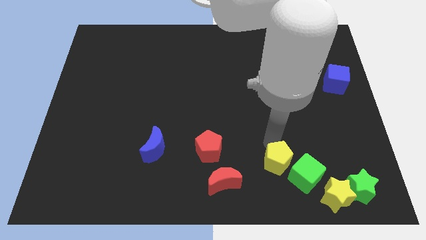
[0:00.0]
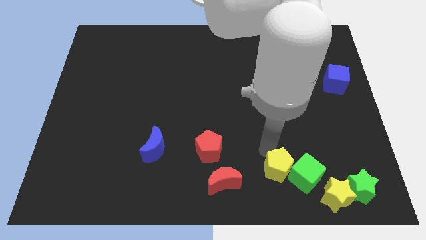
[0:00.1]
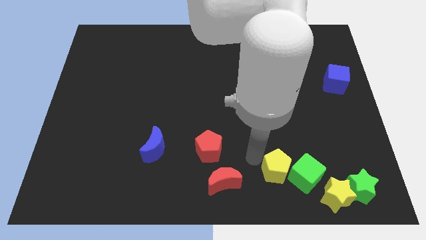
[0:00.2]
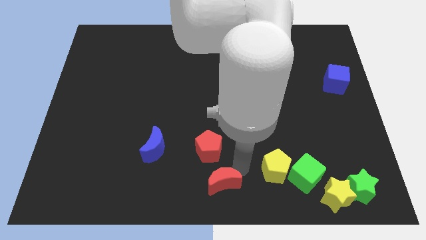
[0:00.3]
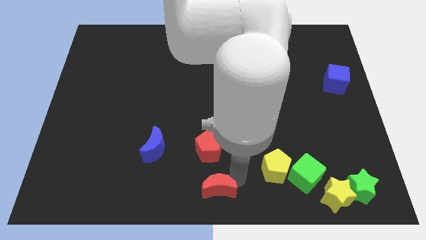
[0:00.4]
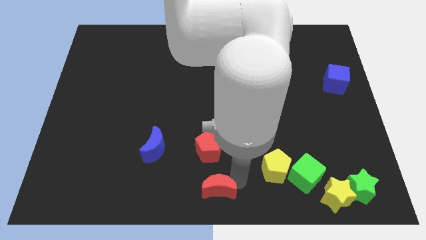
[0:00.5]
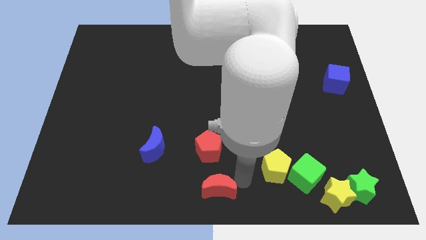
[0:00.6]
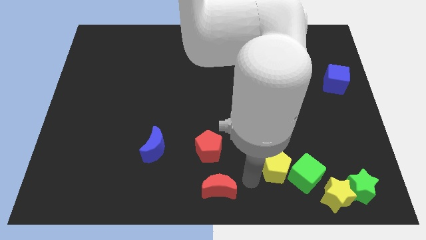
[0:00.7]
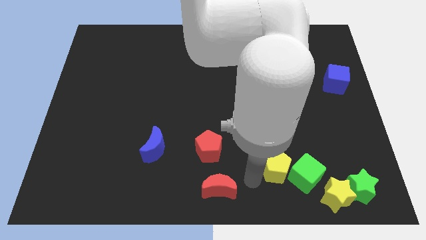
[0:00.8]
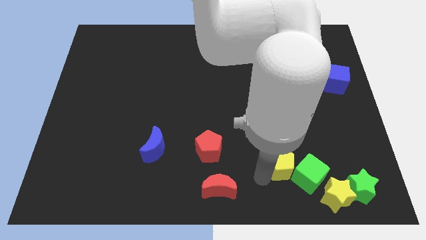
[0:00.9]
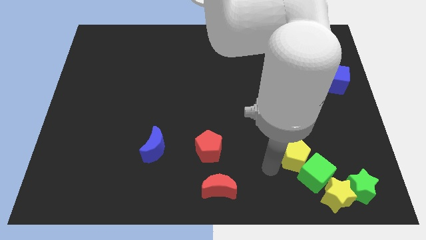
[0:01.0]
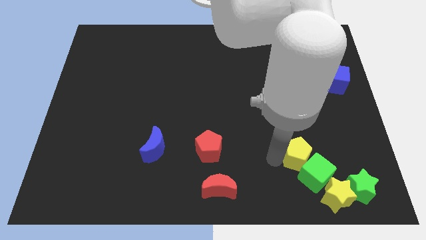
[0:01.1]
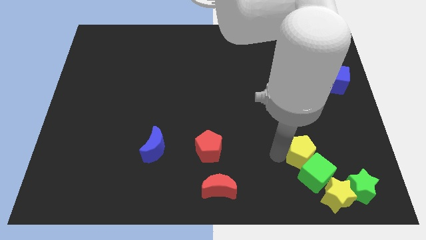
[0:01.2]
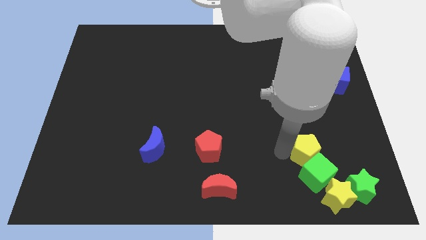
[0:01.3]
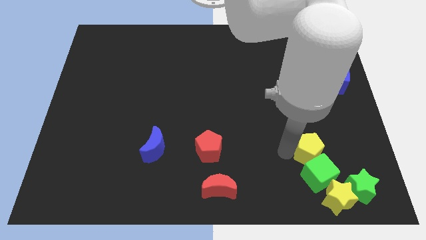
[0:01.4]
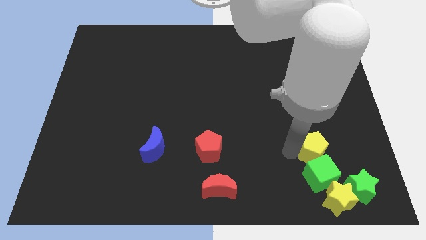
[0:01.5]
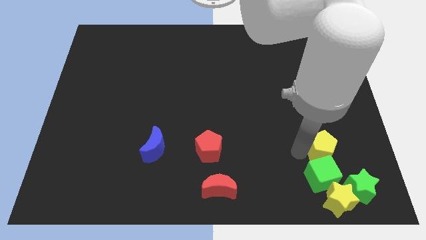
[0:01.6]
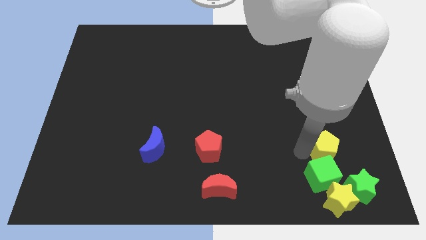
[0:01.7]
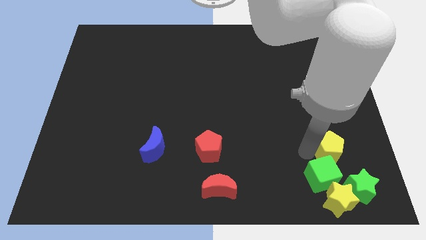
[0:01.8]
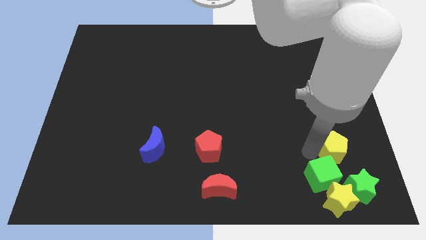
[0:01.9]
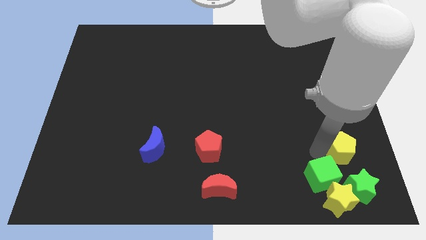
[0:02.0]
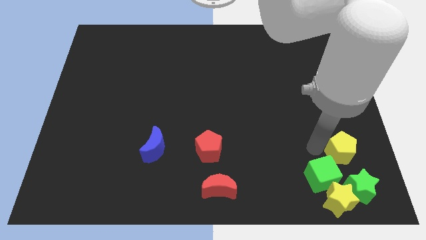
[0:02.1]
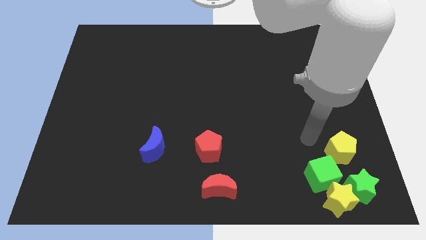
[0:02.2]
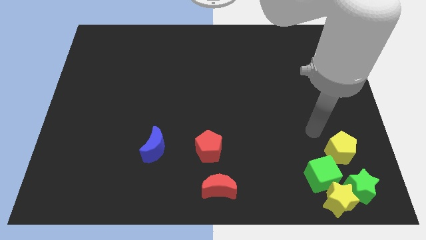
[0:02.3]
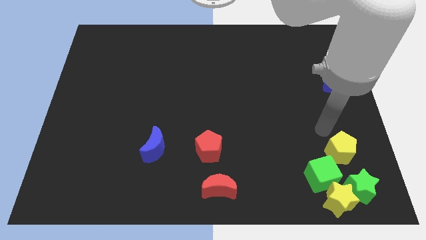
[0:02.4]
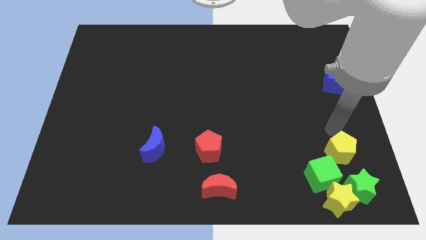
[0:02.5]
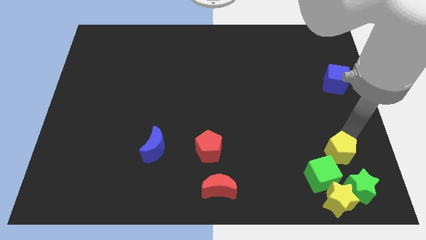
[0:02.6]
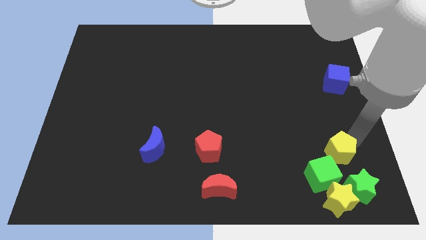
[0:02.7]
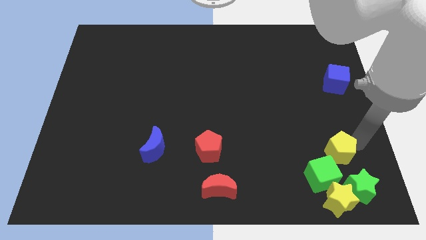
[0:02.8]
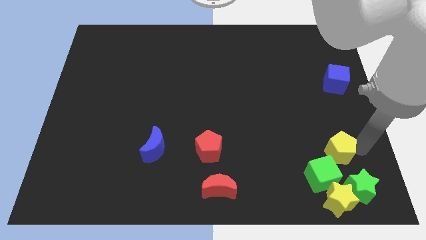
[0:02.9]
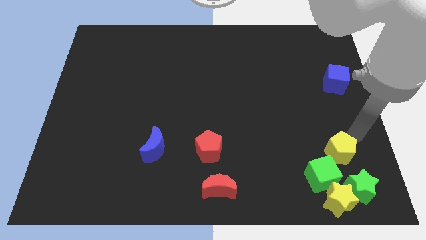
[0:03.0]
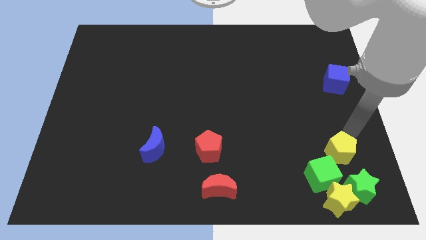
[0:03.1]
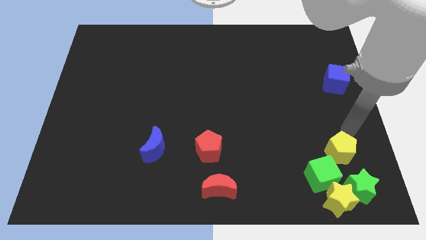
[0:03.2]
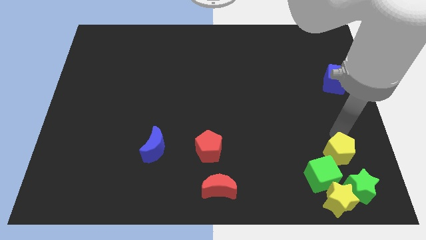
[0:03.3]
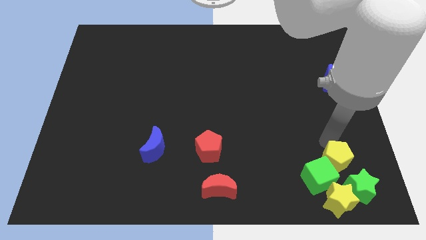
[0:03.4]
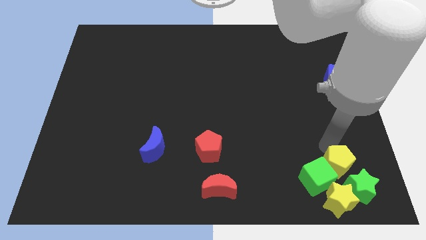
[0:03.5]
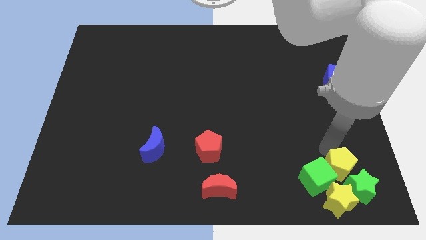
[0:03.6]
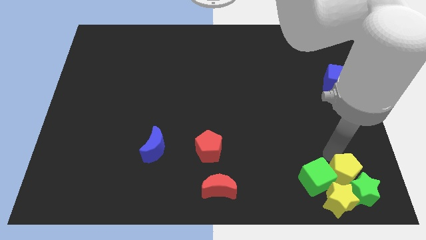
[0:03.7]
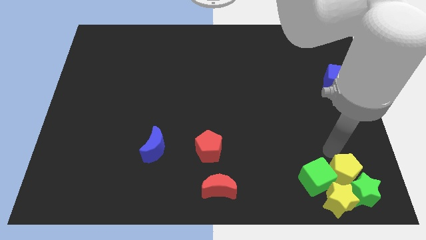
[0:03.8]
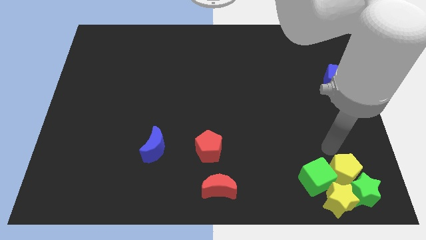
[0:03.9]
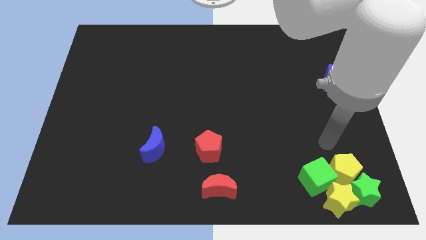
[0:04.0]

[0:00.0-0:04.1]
attach the yellow pentagon to the green star

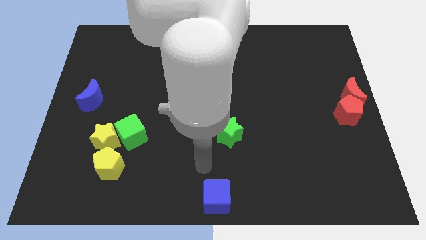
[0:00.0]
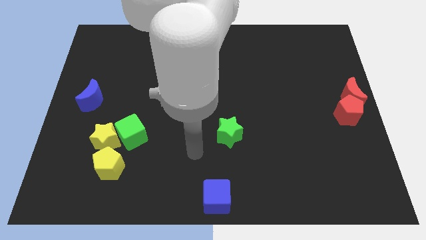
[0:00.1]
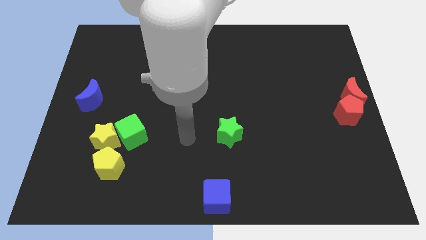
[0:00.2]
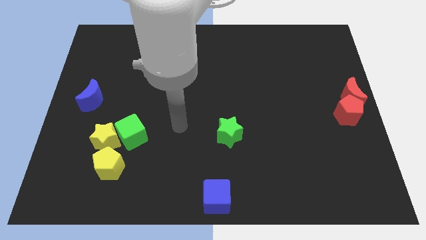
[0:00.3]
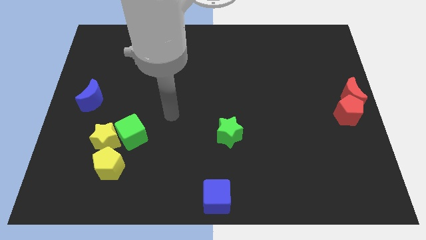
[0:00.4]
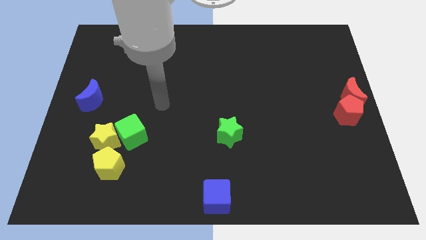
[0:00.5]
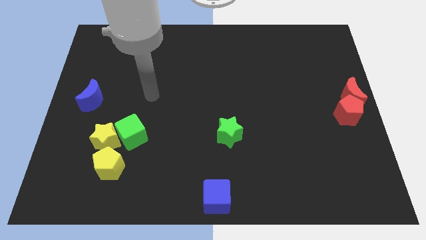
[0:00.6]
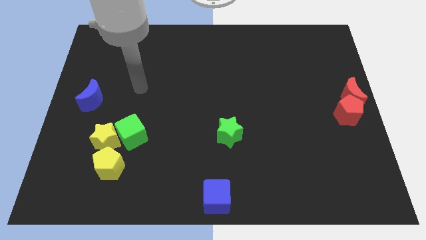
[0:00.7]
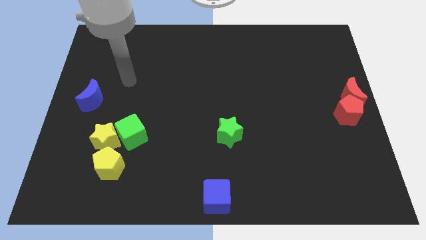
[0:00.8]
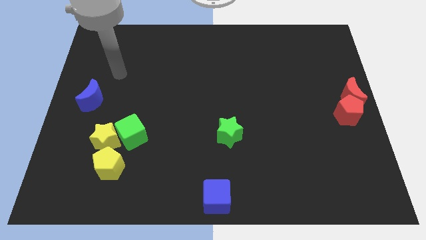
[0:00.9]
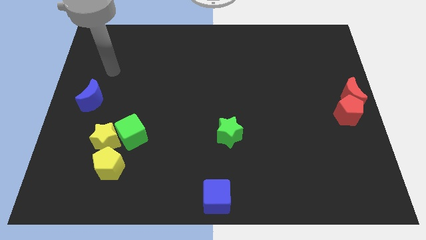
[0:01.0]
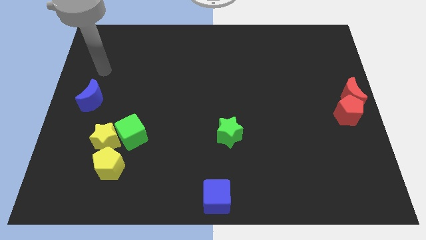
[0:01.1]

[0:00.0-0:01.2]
move the arm away from the blue cube

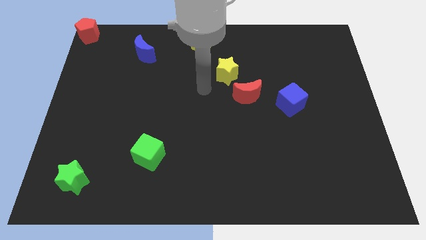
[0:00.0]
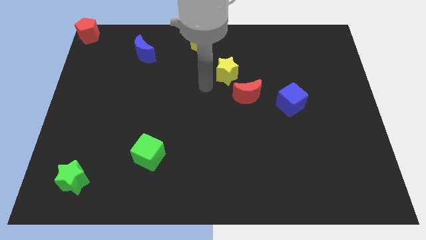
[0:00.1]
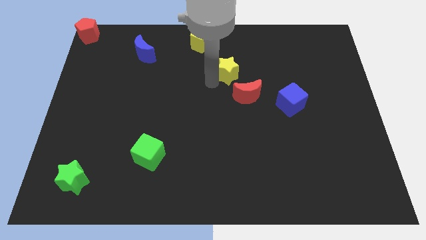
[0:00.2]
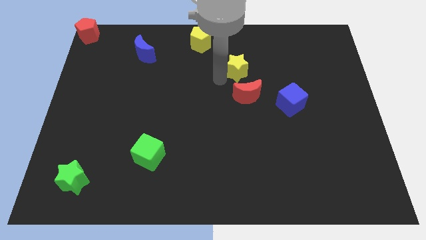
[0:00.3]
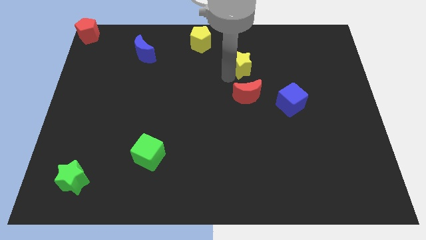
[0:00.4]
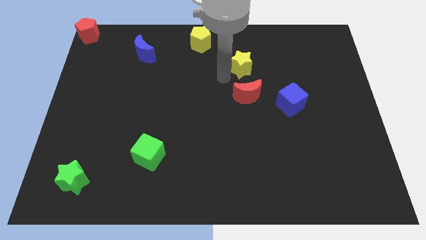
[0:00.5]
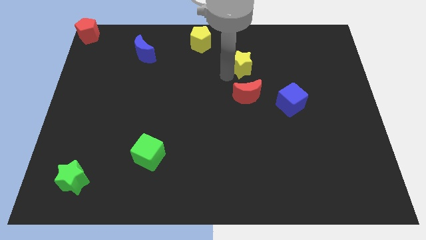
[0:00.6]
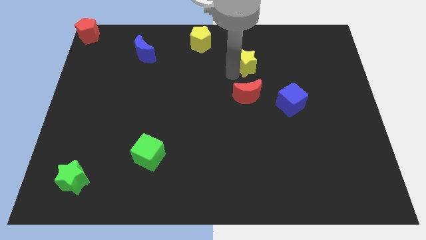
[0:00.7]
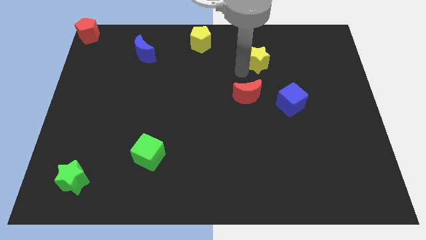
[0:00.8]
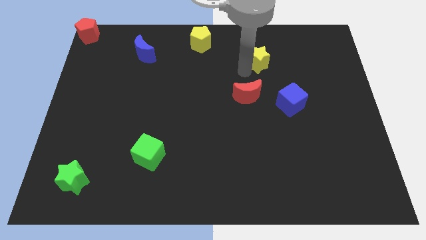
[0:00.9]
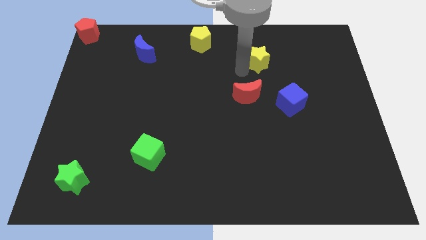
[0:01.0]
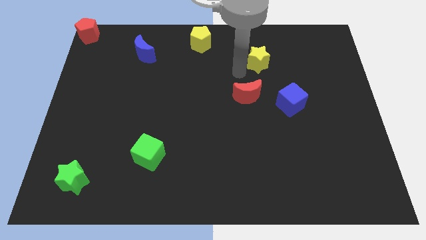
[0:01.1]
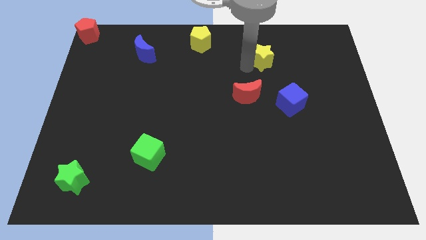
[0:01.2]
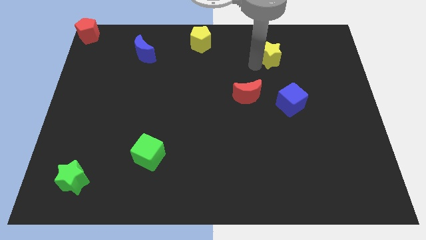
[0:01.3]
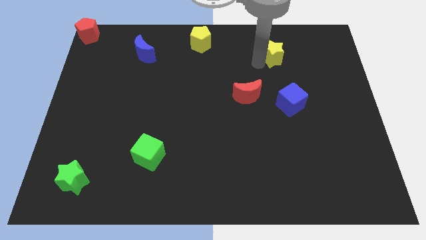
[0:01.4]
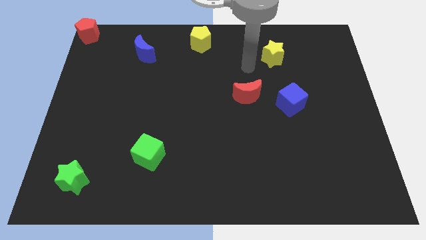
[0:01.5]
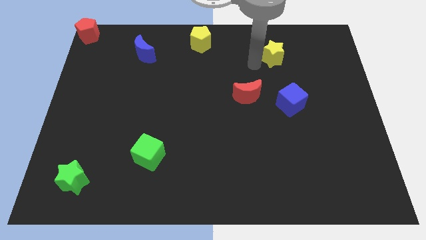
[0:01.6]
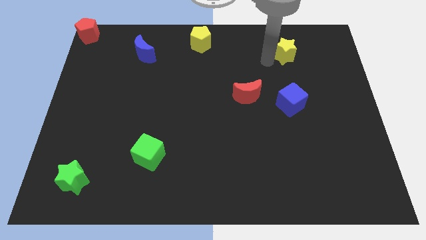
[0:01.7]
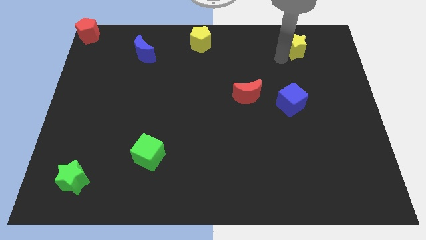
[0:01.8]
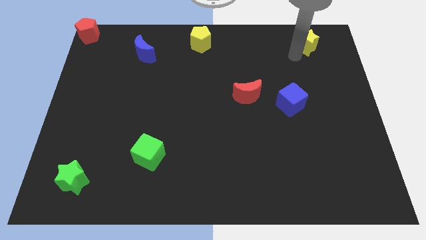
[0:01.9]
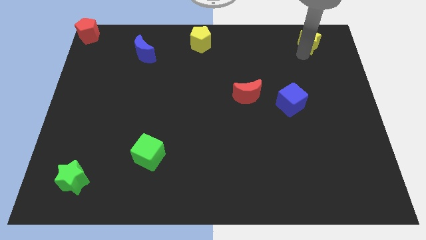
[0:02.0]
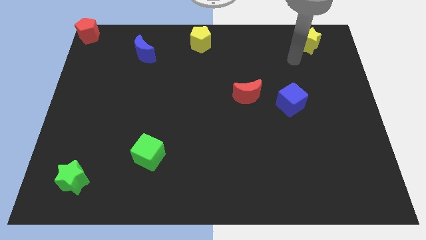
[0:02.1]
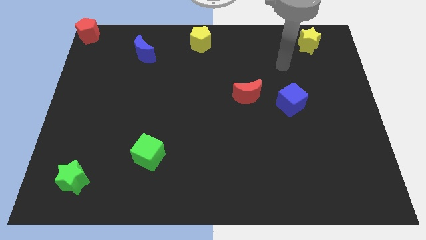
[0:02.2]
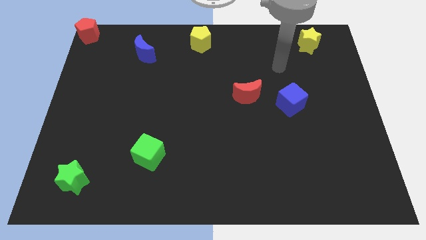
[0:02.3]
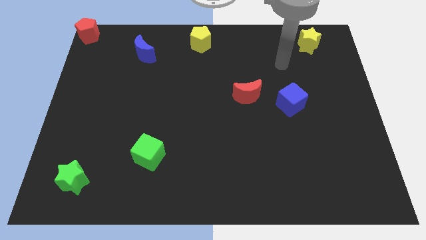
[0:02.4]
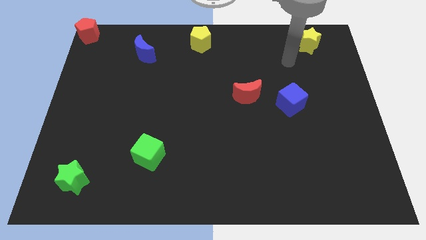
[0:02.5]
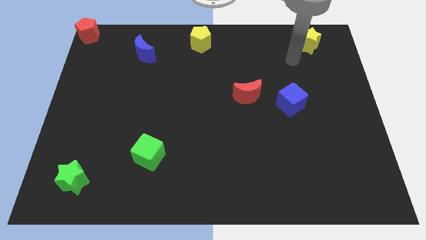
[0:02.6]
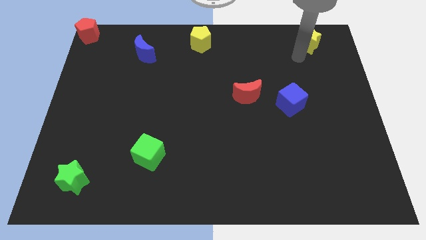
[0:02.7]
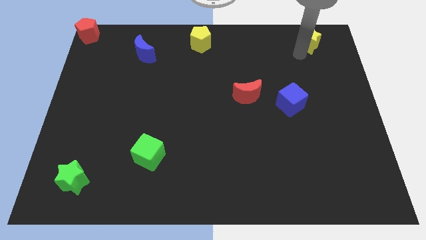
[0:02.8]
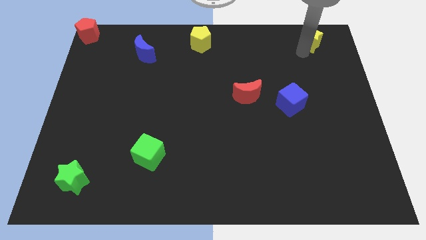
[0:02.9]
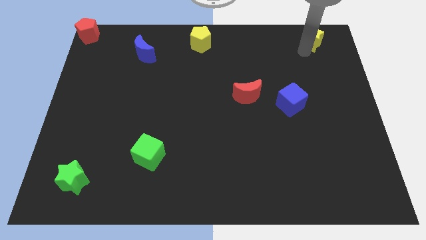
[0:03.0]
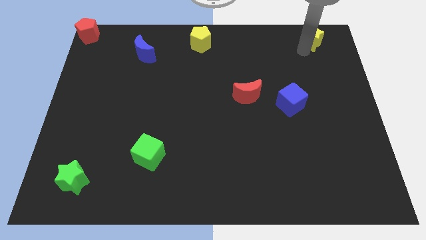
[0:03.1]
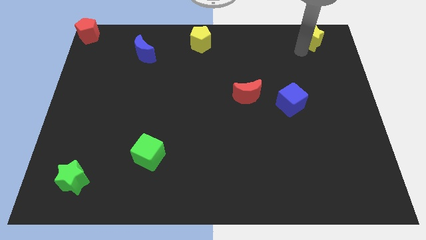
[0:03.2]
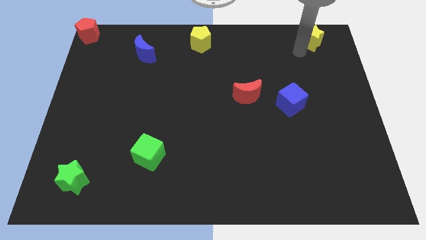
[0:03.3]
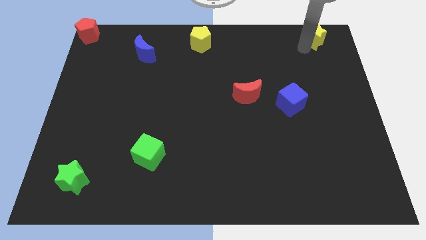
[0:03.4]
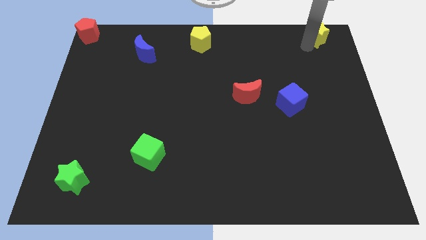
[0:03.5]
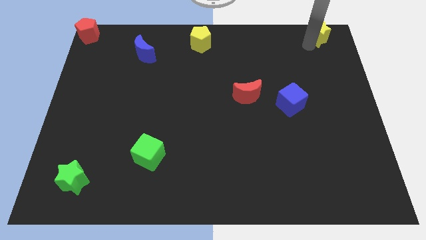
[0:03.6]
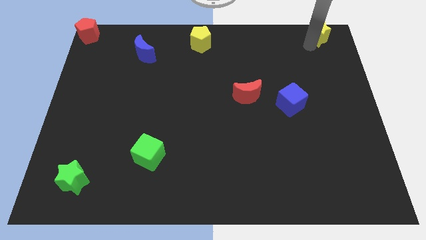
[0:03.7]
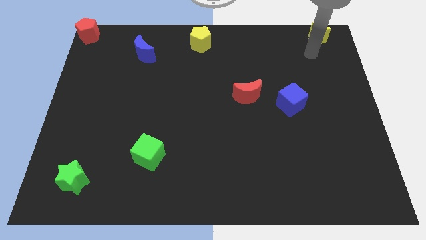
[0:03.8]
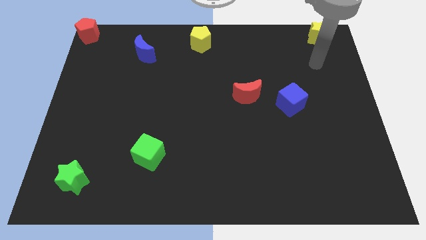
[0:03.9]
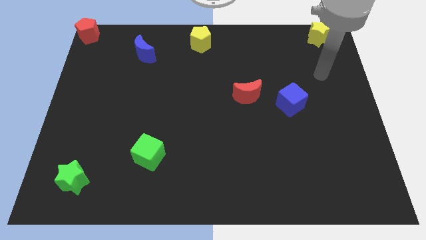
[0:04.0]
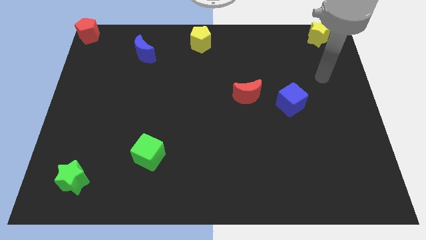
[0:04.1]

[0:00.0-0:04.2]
place the yellow star at the top right corner
